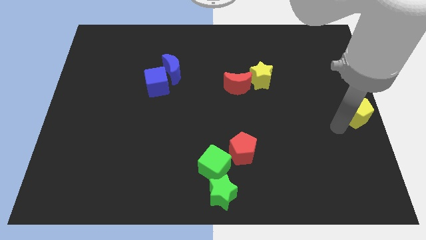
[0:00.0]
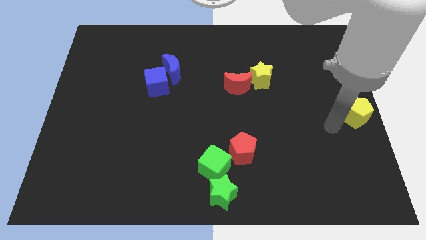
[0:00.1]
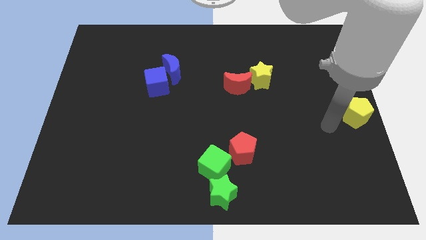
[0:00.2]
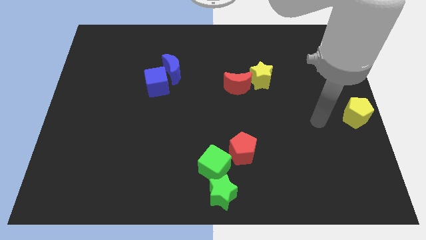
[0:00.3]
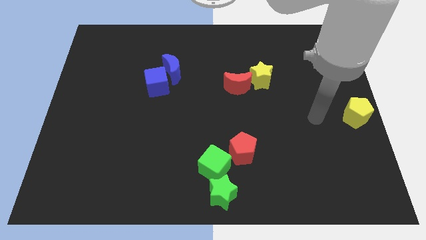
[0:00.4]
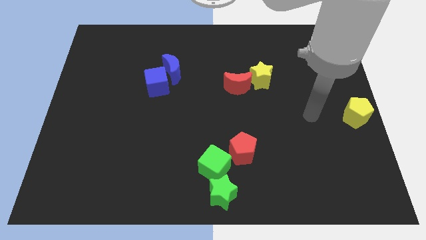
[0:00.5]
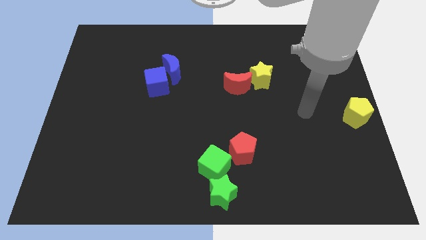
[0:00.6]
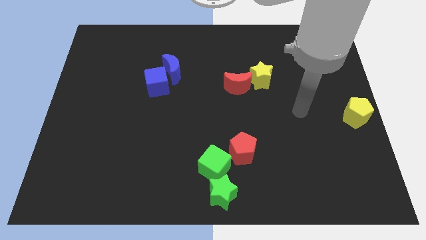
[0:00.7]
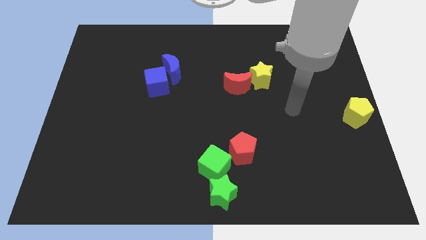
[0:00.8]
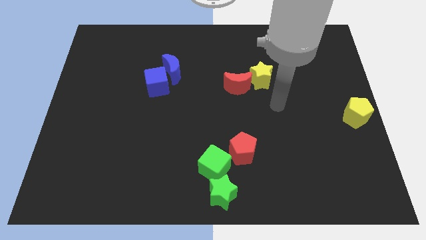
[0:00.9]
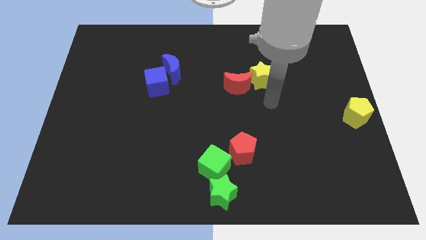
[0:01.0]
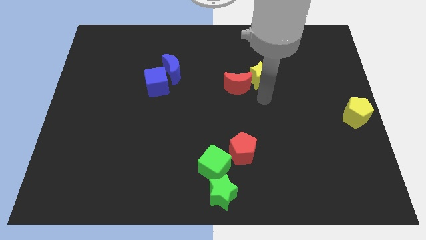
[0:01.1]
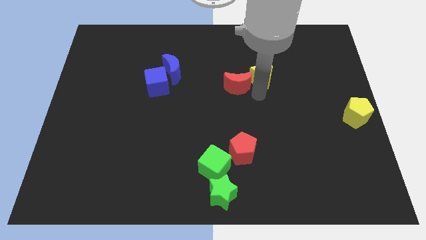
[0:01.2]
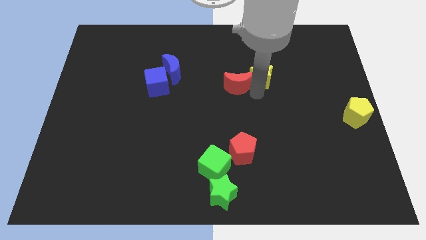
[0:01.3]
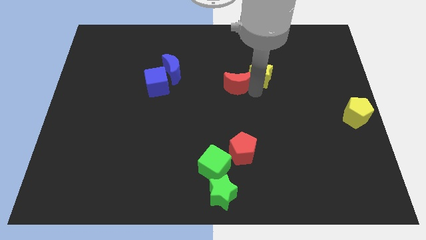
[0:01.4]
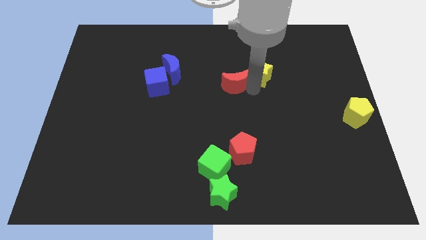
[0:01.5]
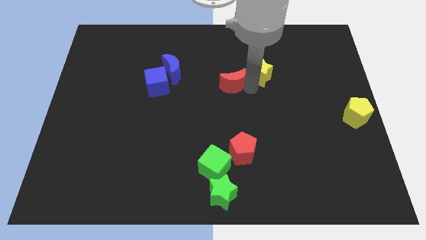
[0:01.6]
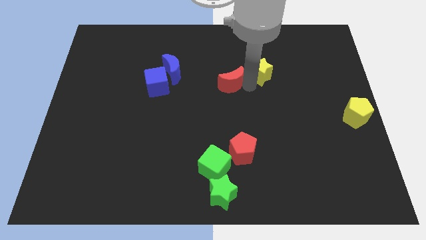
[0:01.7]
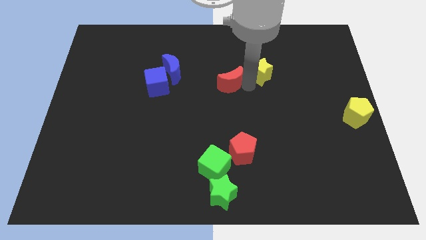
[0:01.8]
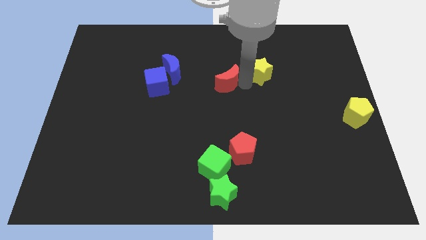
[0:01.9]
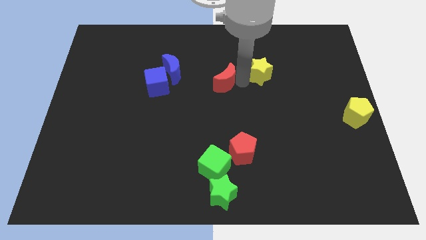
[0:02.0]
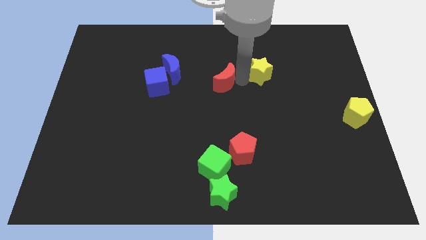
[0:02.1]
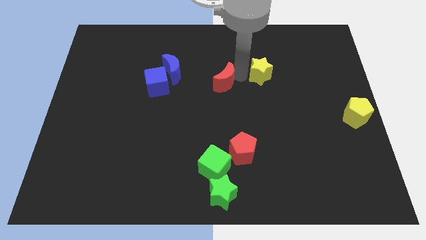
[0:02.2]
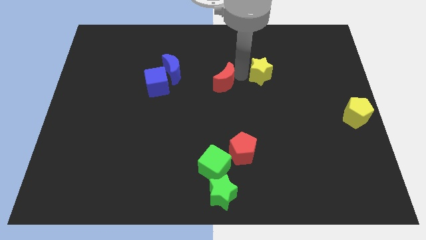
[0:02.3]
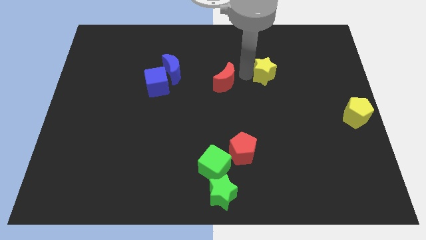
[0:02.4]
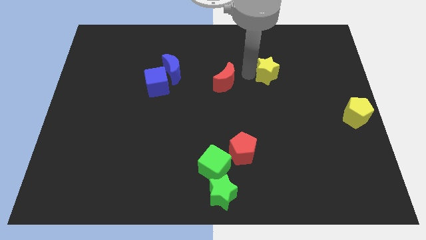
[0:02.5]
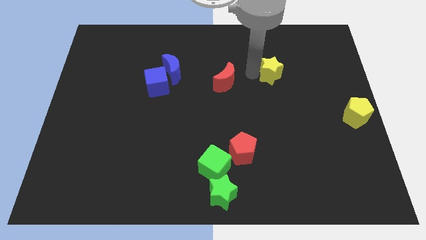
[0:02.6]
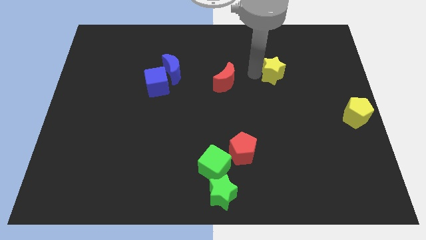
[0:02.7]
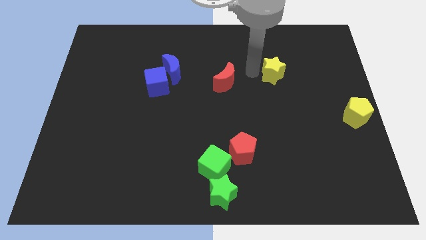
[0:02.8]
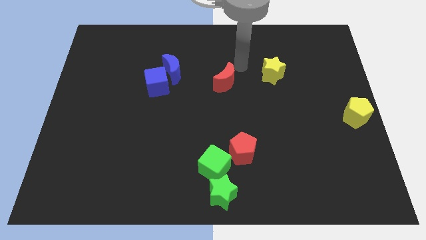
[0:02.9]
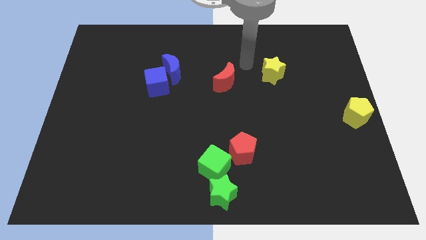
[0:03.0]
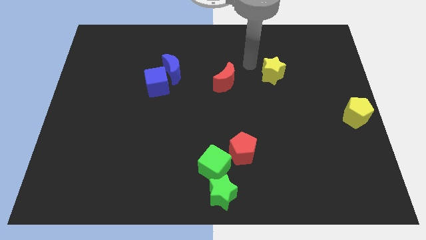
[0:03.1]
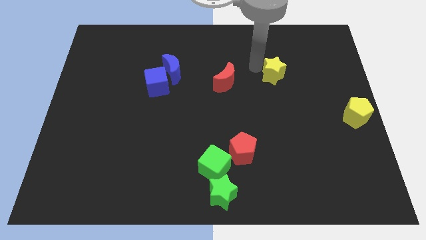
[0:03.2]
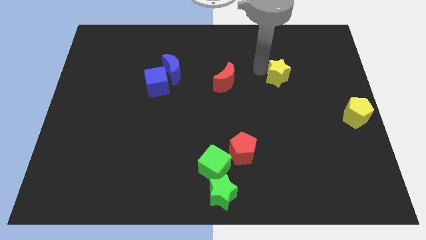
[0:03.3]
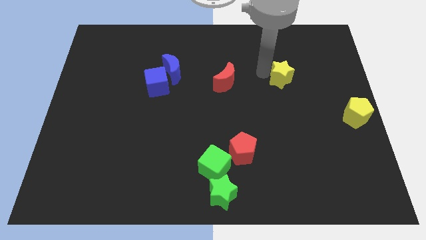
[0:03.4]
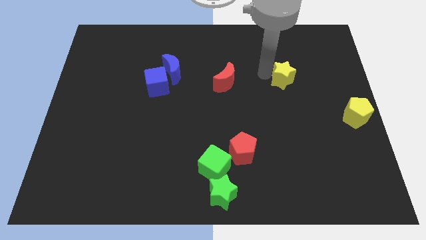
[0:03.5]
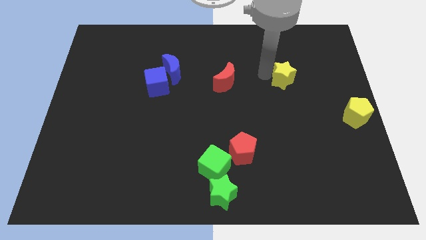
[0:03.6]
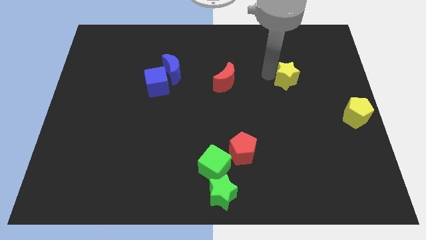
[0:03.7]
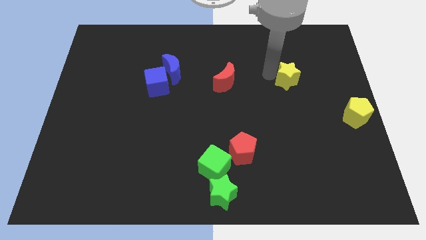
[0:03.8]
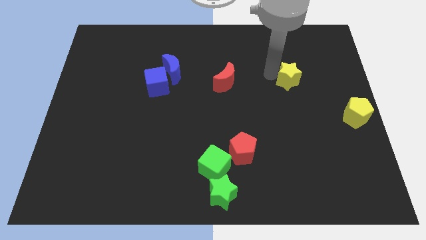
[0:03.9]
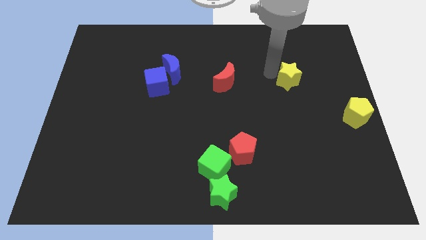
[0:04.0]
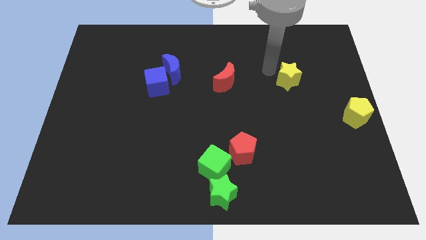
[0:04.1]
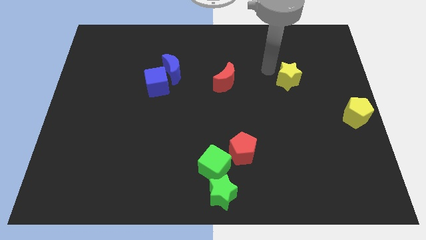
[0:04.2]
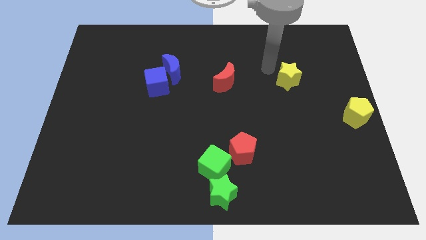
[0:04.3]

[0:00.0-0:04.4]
separate the red moon and yellow star

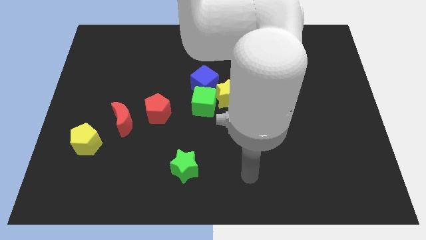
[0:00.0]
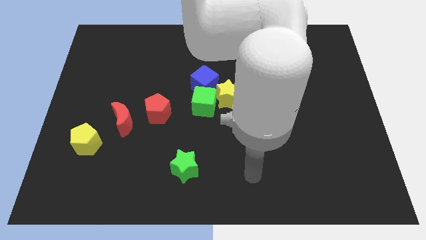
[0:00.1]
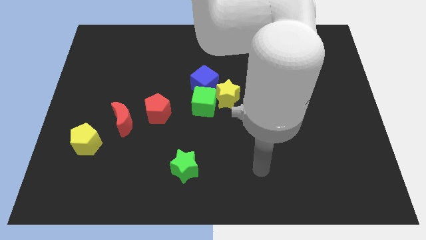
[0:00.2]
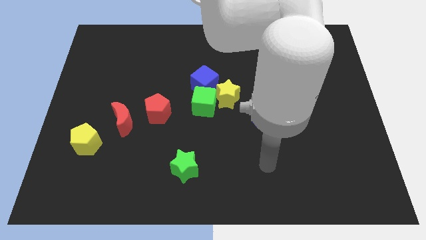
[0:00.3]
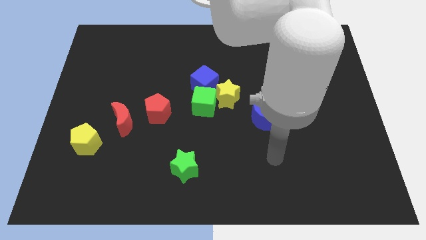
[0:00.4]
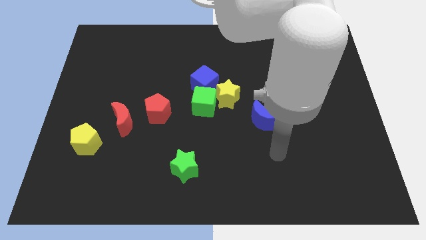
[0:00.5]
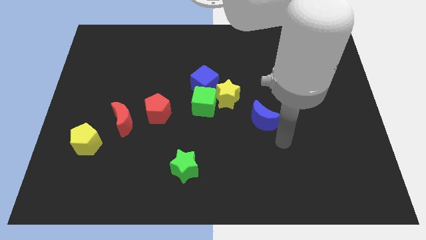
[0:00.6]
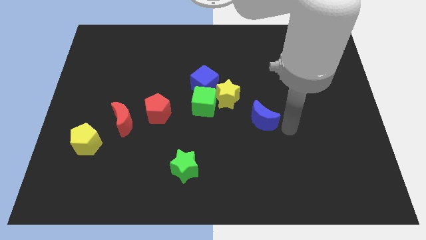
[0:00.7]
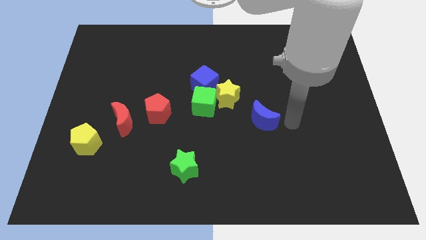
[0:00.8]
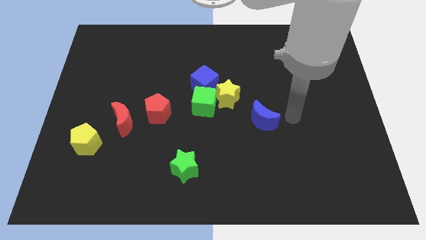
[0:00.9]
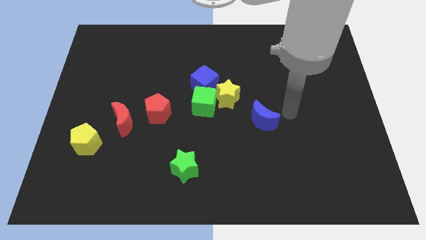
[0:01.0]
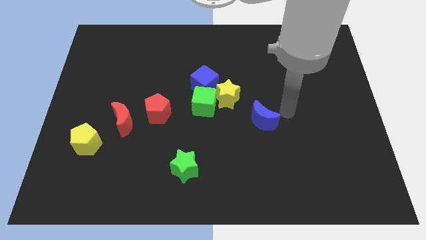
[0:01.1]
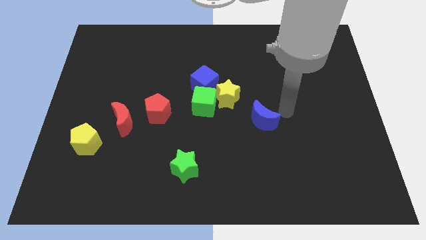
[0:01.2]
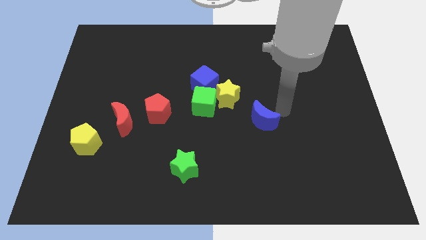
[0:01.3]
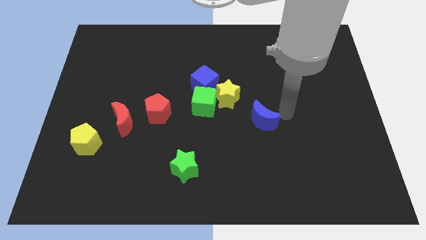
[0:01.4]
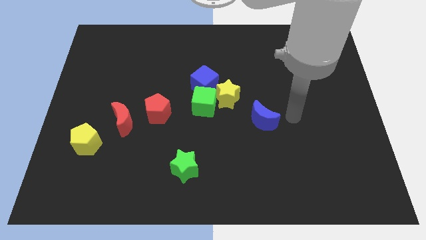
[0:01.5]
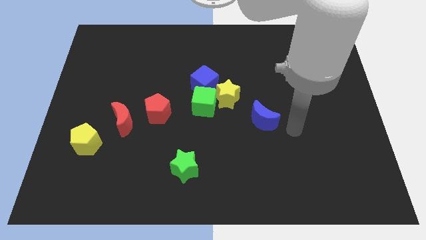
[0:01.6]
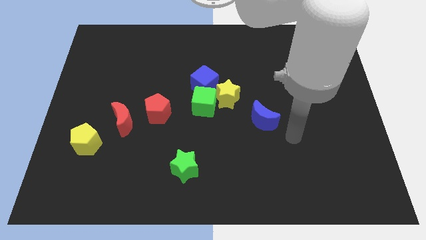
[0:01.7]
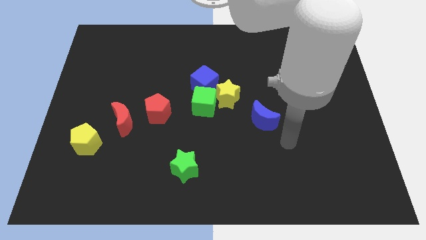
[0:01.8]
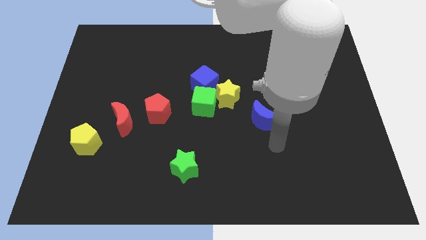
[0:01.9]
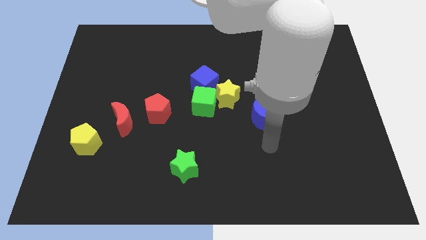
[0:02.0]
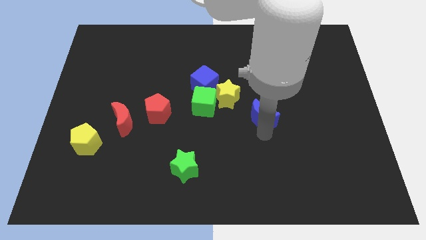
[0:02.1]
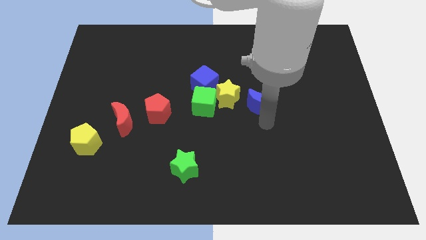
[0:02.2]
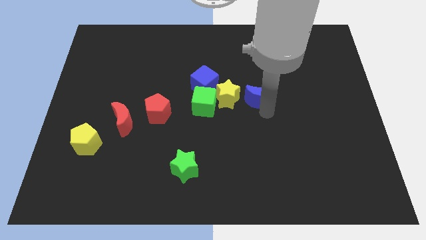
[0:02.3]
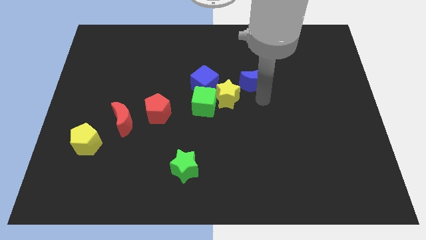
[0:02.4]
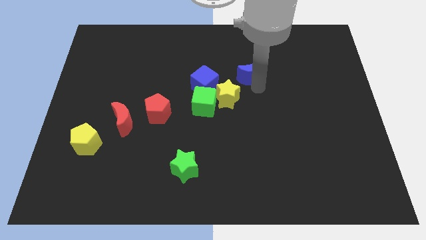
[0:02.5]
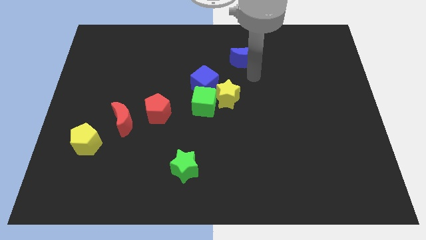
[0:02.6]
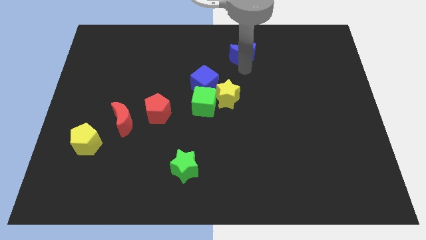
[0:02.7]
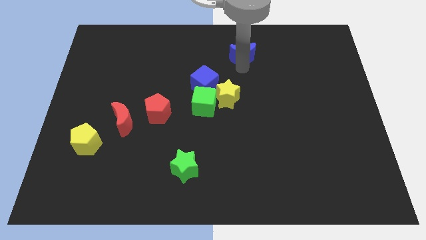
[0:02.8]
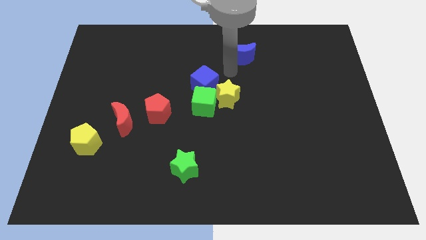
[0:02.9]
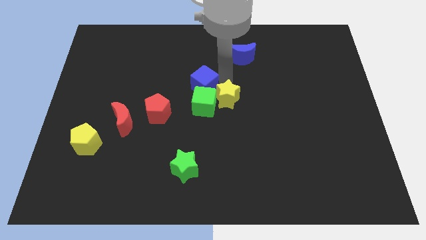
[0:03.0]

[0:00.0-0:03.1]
push the blue moon towards the top center

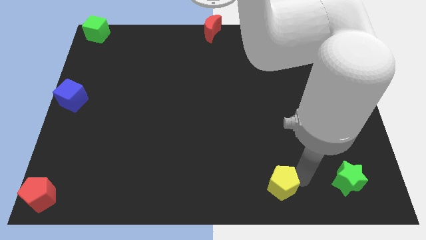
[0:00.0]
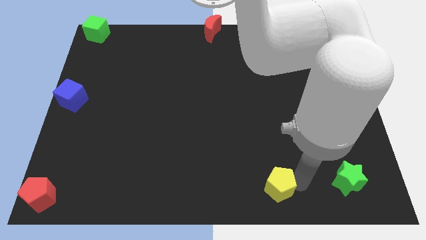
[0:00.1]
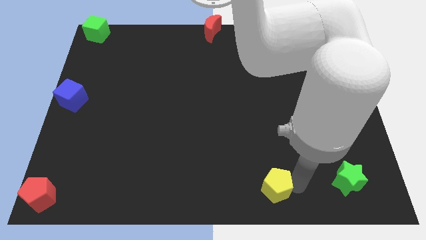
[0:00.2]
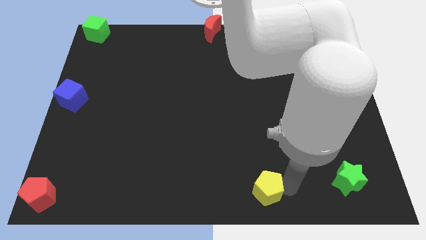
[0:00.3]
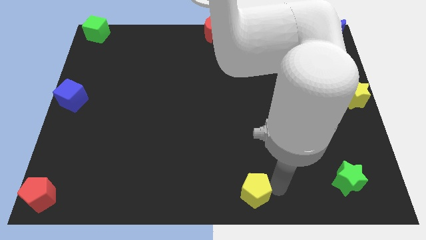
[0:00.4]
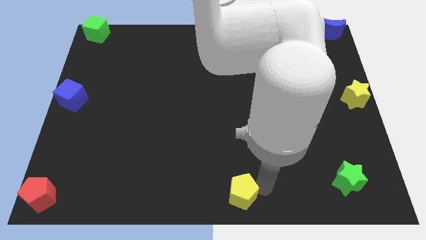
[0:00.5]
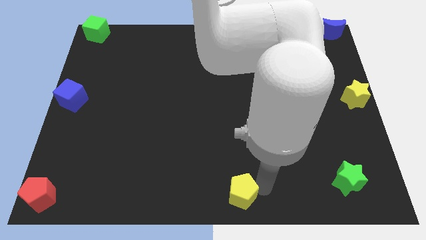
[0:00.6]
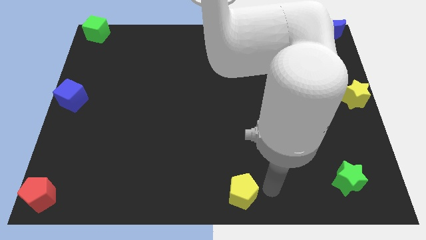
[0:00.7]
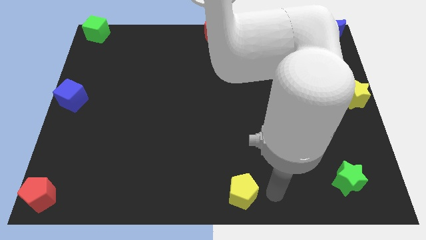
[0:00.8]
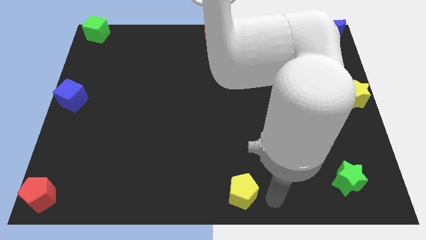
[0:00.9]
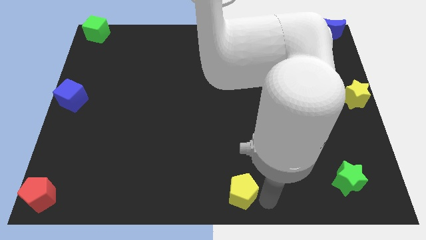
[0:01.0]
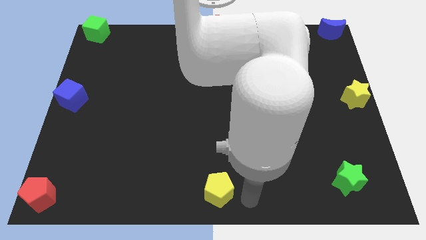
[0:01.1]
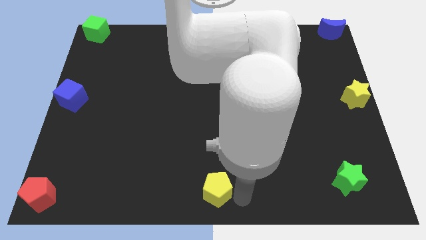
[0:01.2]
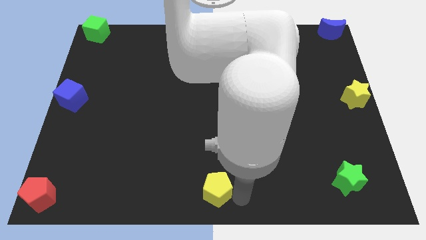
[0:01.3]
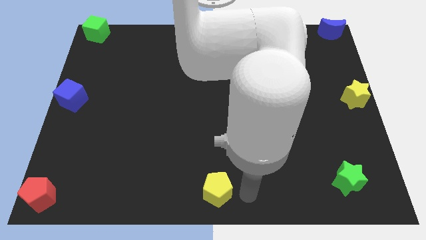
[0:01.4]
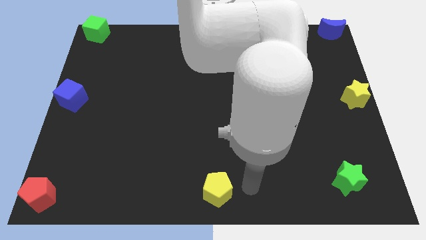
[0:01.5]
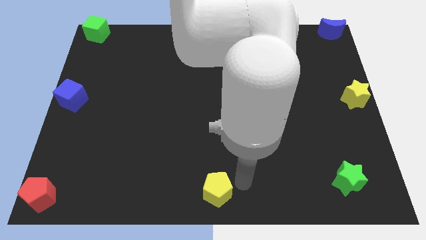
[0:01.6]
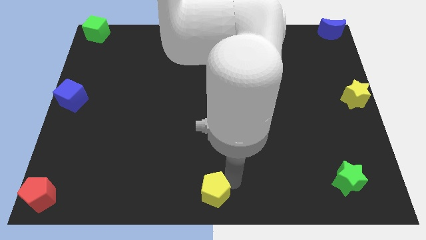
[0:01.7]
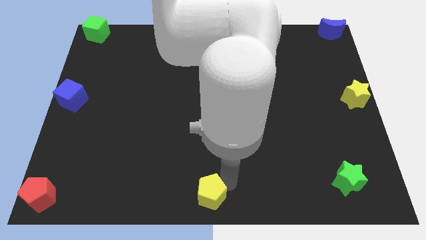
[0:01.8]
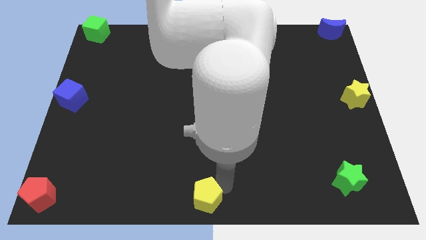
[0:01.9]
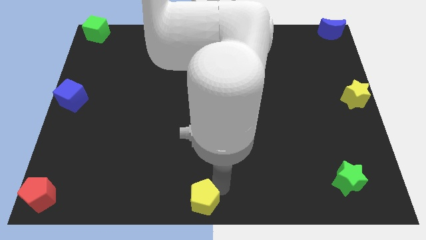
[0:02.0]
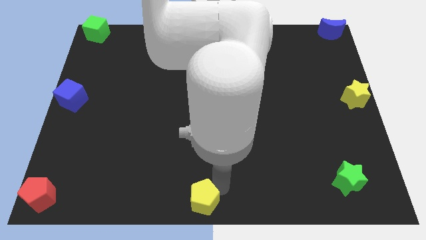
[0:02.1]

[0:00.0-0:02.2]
move the yellow pentagon to the bottom center
